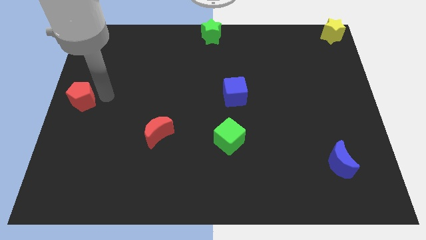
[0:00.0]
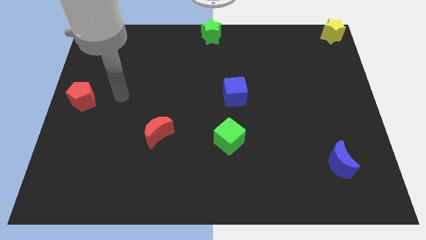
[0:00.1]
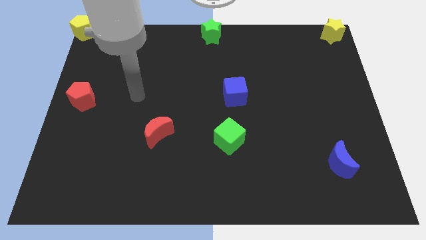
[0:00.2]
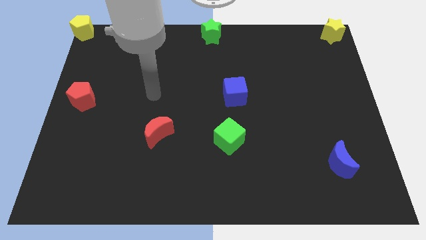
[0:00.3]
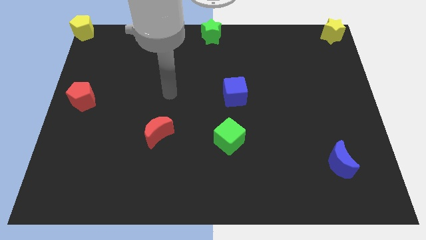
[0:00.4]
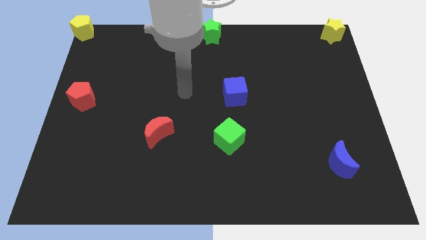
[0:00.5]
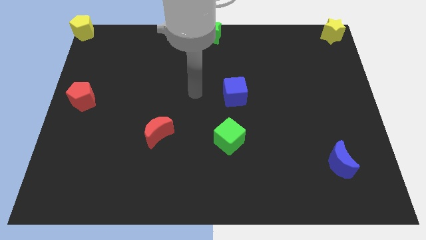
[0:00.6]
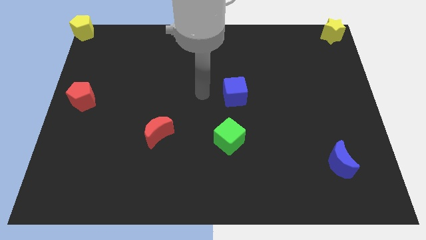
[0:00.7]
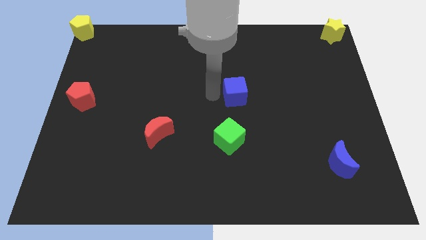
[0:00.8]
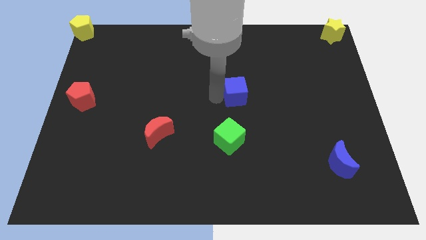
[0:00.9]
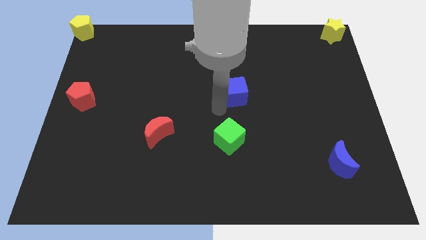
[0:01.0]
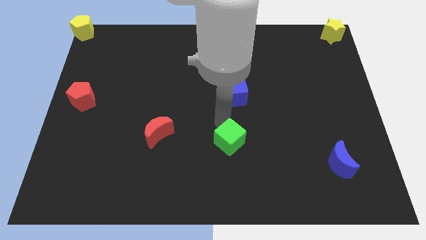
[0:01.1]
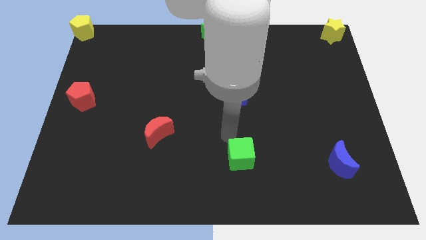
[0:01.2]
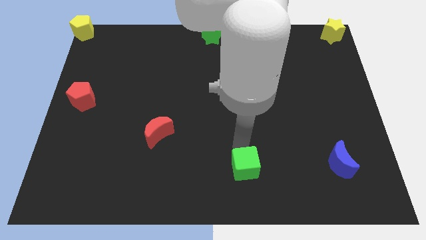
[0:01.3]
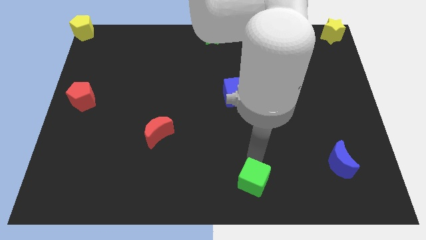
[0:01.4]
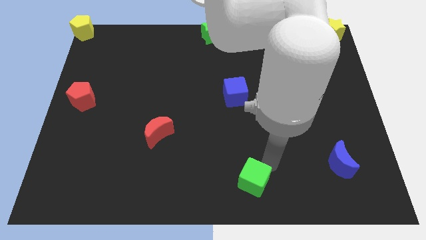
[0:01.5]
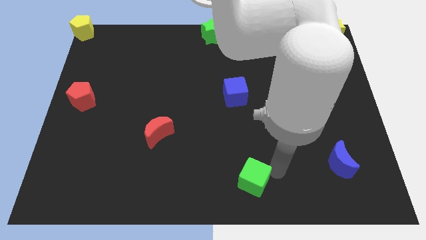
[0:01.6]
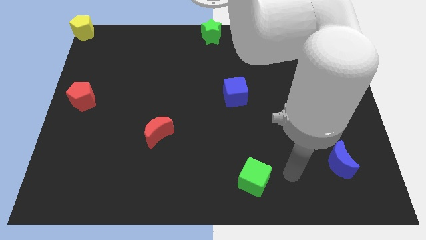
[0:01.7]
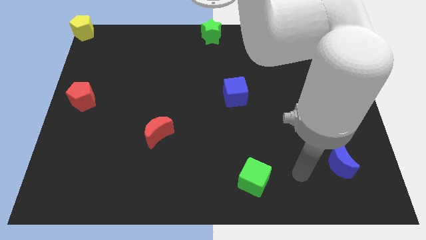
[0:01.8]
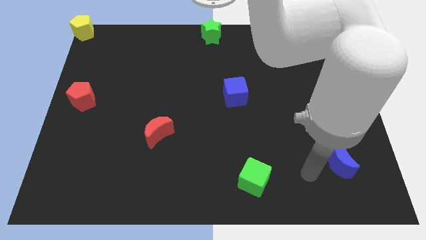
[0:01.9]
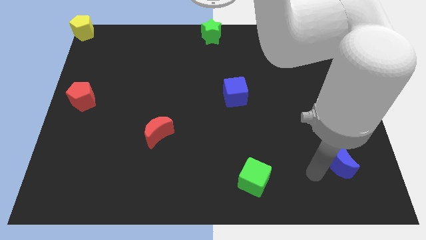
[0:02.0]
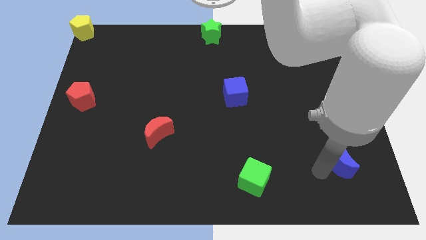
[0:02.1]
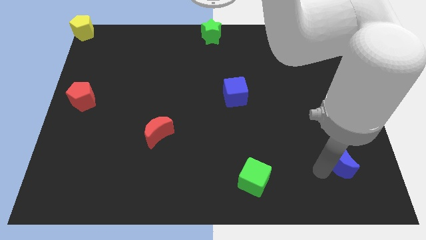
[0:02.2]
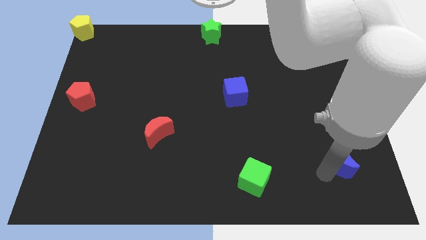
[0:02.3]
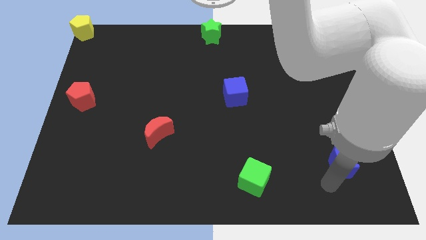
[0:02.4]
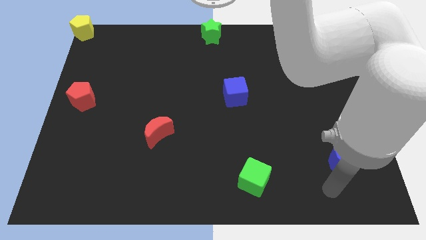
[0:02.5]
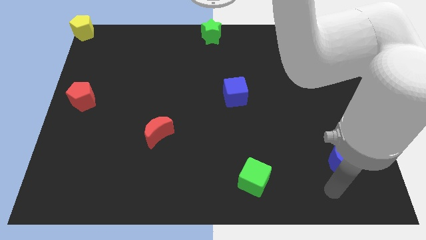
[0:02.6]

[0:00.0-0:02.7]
push the green cube towards the bottom center of the board

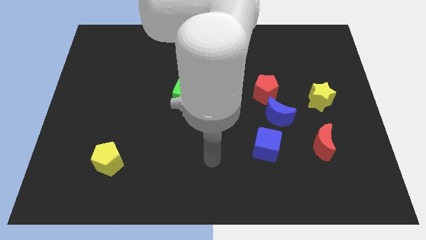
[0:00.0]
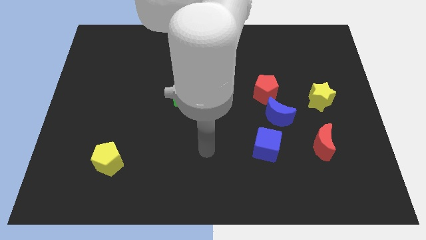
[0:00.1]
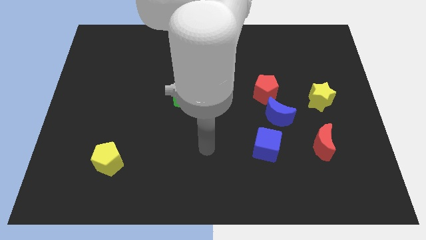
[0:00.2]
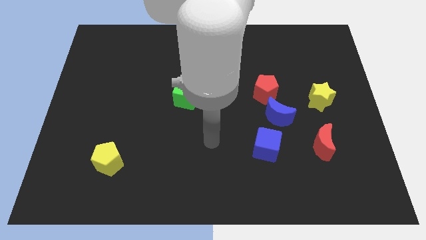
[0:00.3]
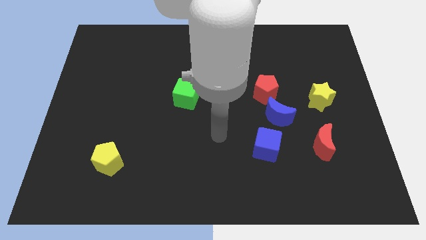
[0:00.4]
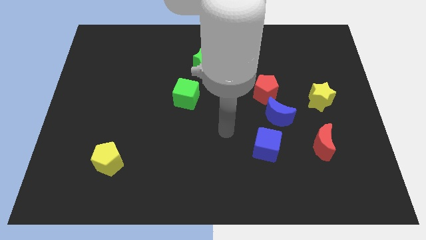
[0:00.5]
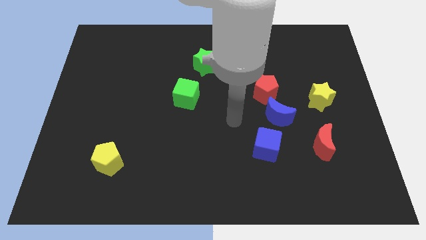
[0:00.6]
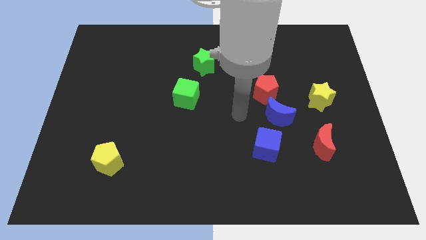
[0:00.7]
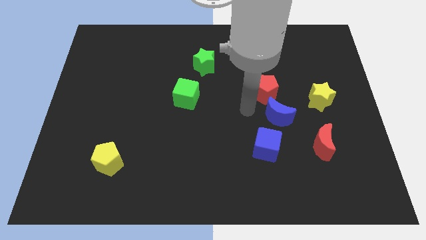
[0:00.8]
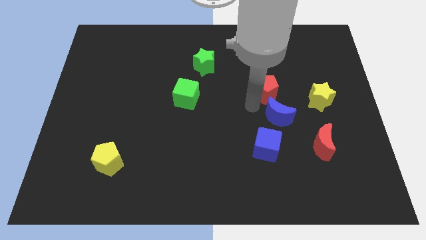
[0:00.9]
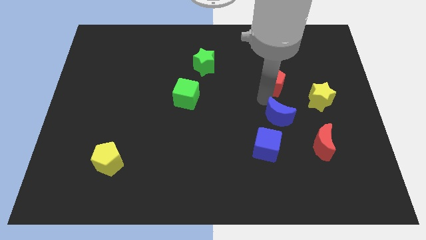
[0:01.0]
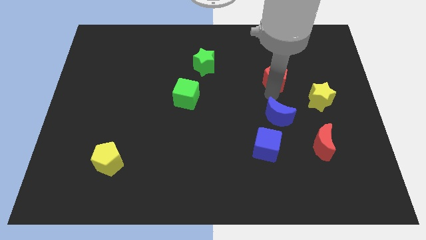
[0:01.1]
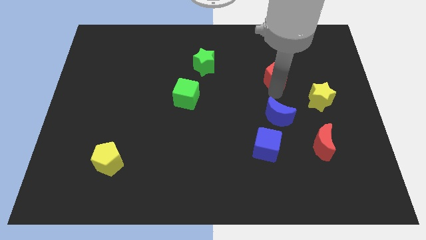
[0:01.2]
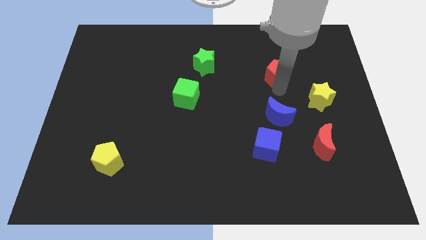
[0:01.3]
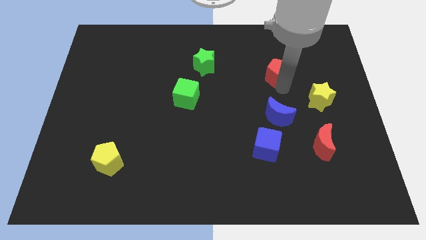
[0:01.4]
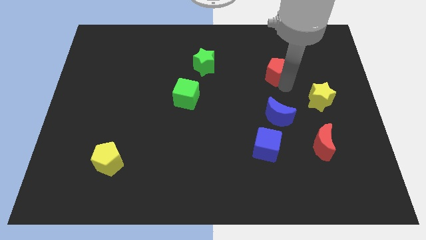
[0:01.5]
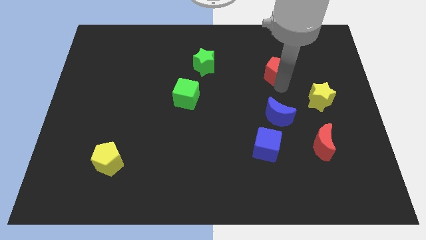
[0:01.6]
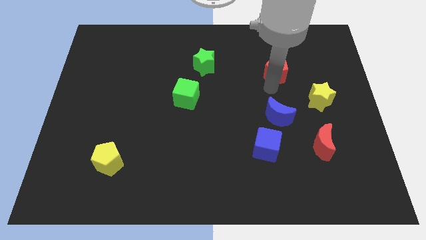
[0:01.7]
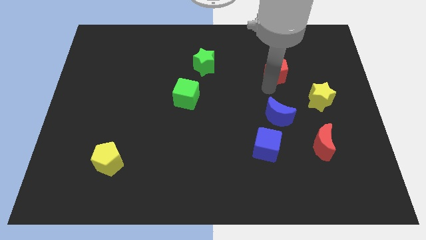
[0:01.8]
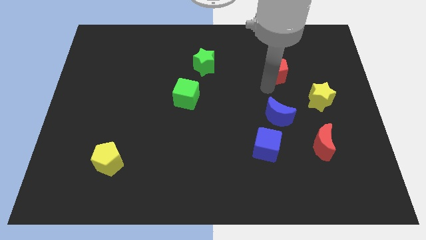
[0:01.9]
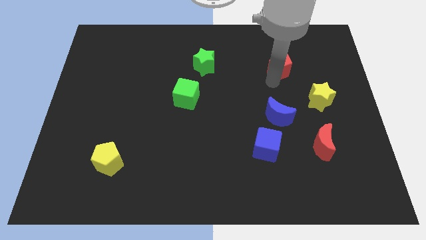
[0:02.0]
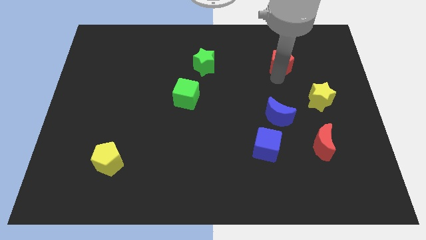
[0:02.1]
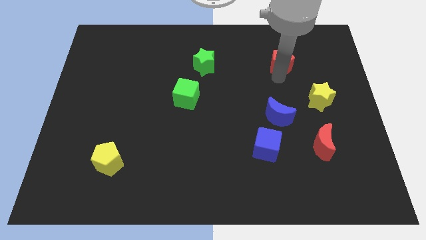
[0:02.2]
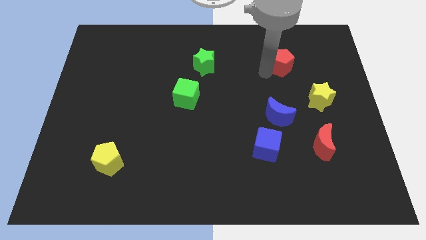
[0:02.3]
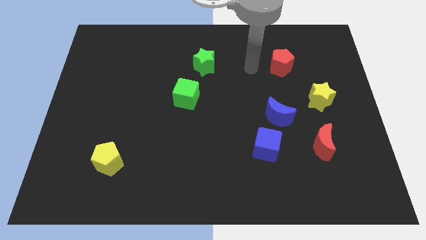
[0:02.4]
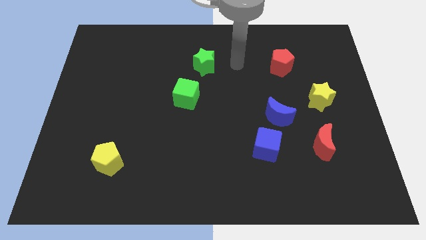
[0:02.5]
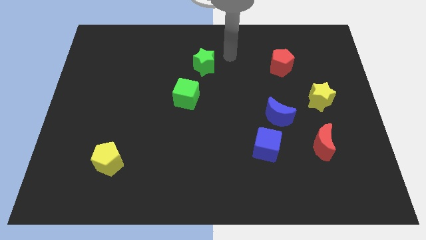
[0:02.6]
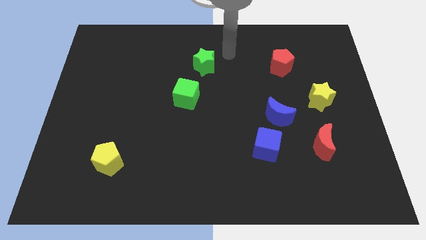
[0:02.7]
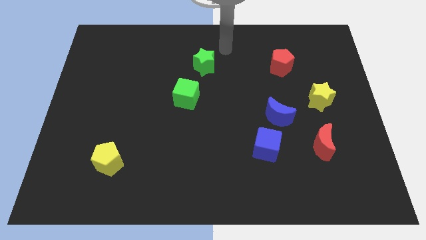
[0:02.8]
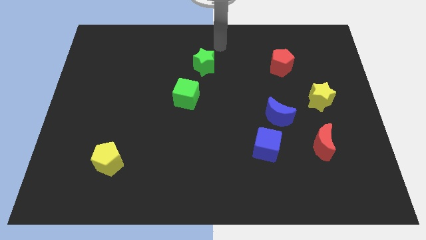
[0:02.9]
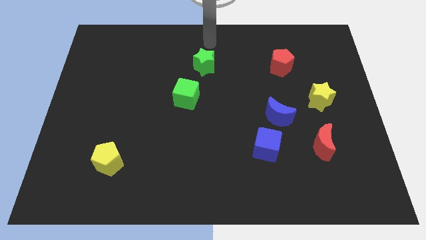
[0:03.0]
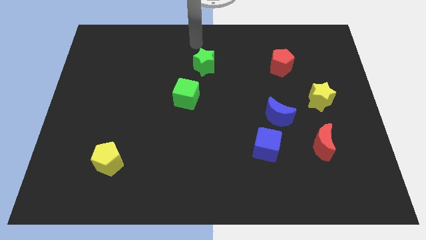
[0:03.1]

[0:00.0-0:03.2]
push the red pentagon towards top

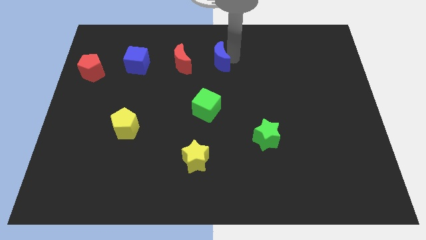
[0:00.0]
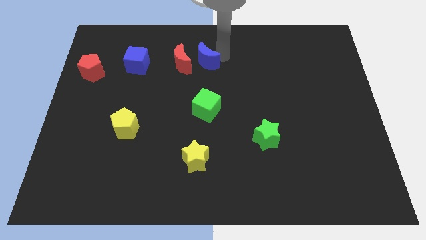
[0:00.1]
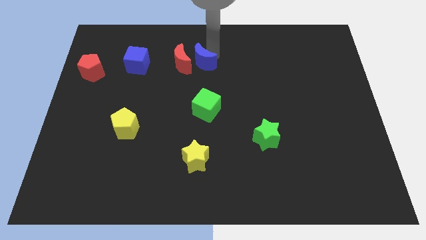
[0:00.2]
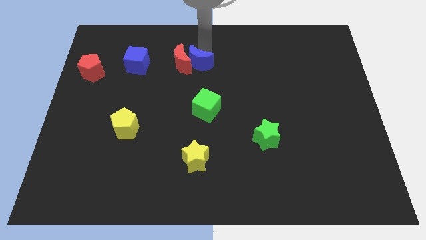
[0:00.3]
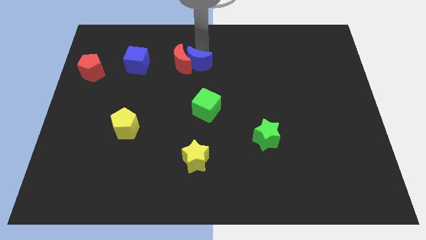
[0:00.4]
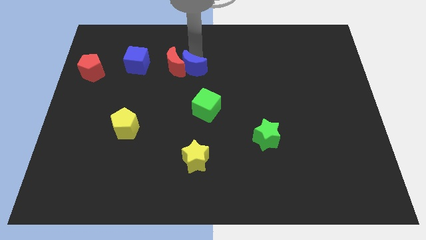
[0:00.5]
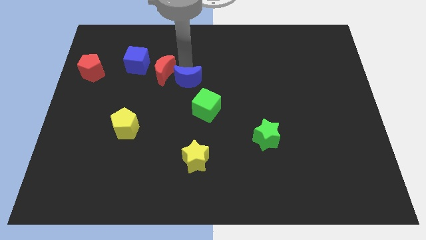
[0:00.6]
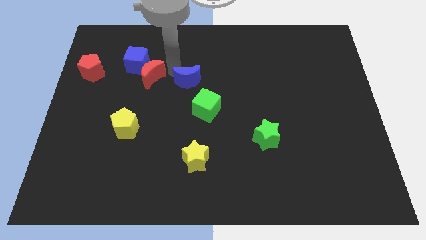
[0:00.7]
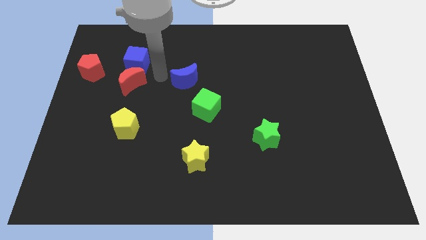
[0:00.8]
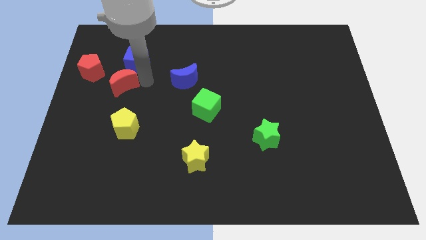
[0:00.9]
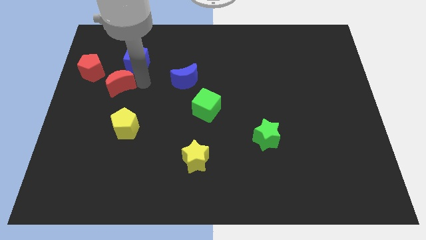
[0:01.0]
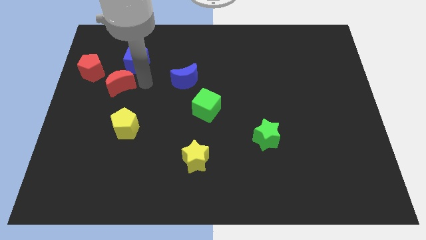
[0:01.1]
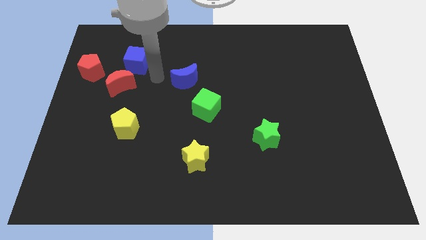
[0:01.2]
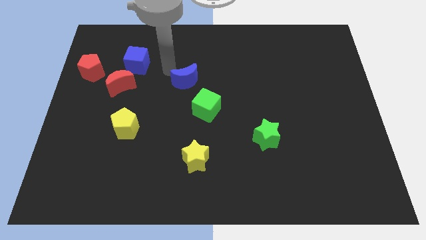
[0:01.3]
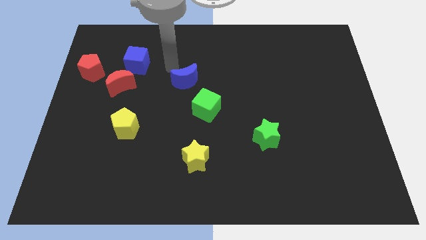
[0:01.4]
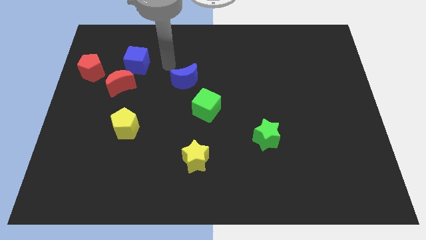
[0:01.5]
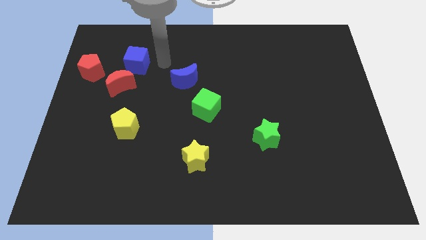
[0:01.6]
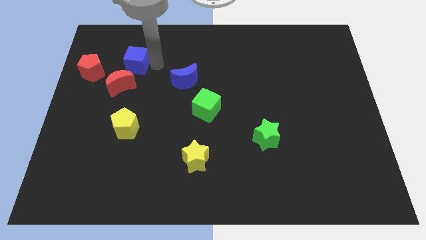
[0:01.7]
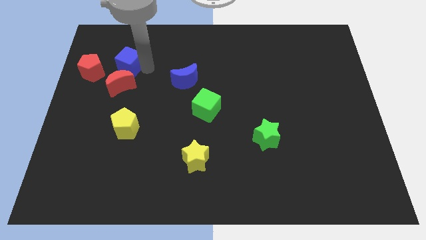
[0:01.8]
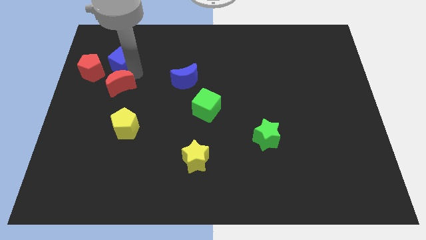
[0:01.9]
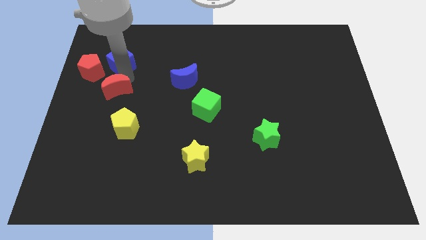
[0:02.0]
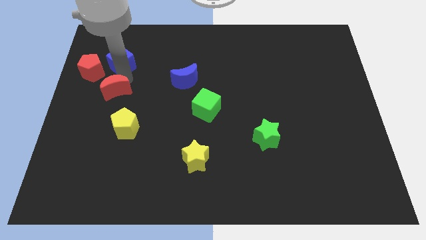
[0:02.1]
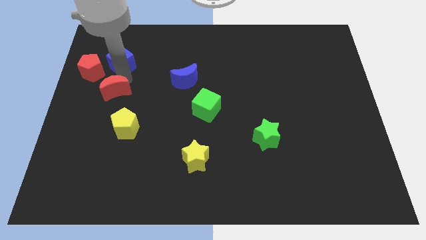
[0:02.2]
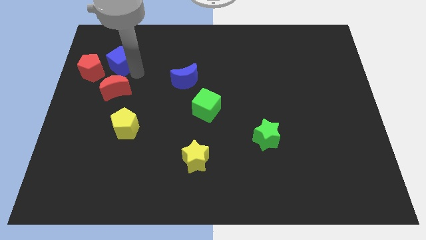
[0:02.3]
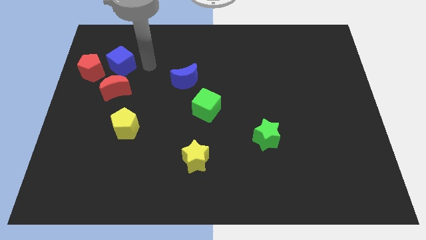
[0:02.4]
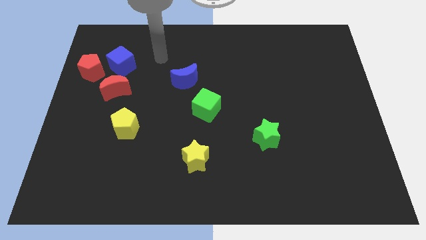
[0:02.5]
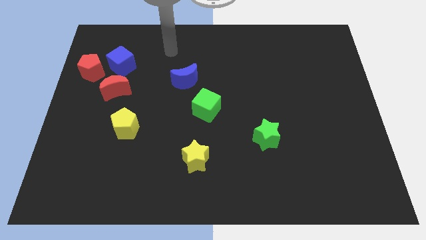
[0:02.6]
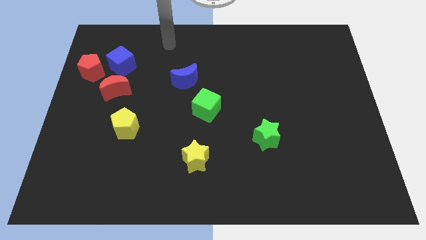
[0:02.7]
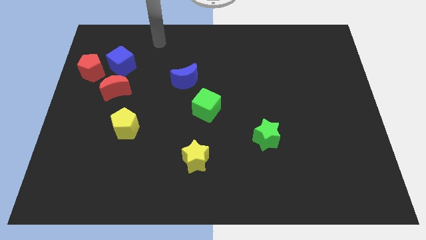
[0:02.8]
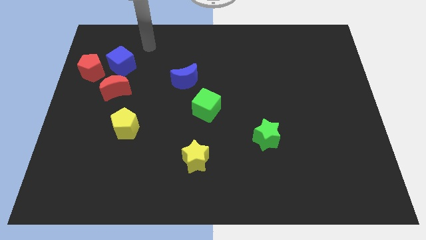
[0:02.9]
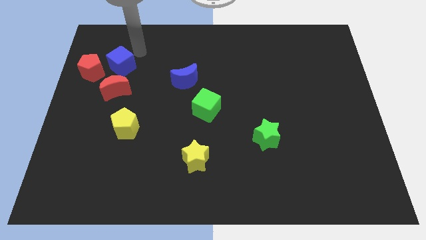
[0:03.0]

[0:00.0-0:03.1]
put the red moon vertically bottom of the blue cube
